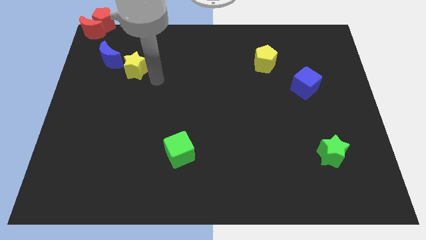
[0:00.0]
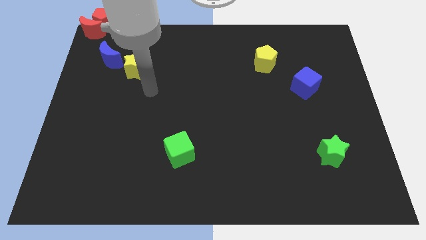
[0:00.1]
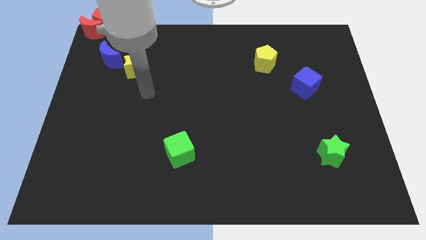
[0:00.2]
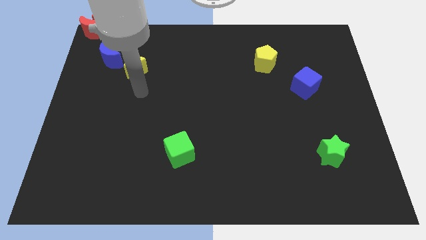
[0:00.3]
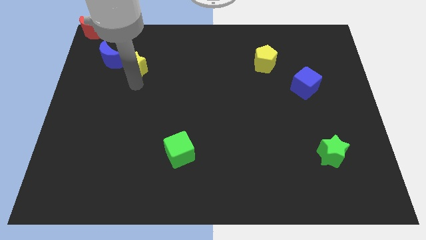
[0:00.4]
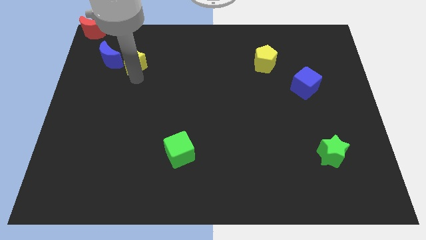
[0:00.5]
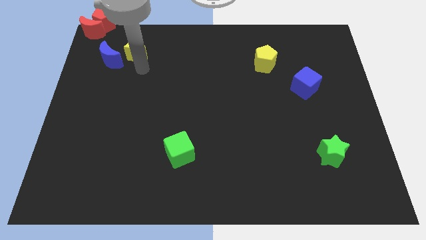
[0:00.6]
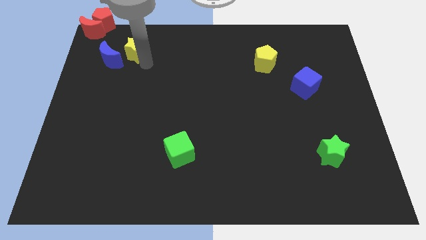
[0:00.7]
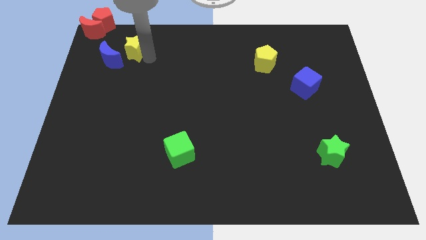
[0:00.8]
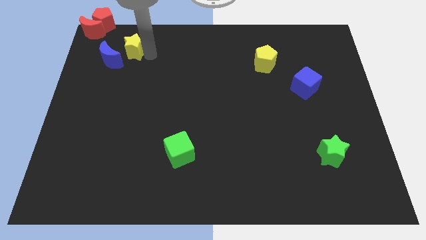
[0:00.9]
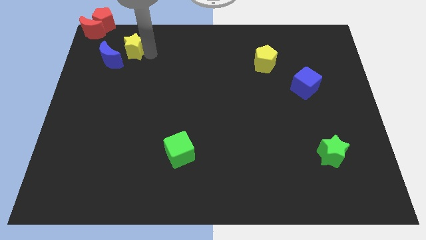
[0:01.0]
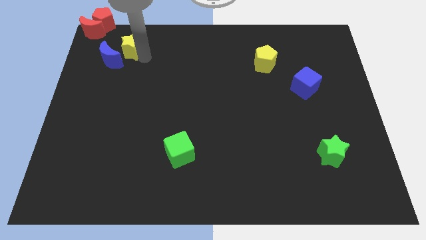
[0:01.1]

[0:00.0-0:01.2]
put the yellow star right to the blue moon

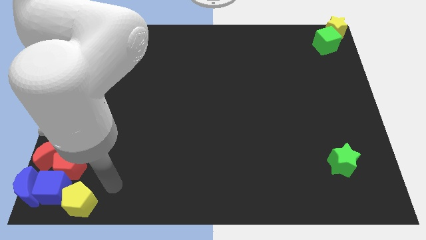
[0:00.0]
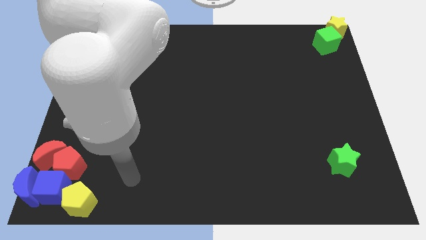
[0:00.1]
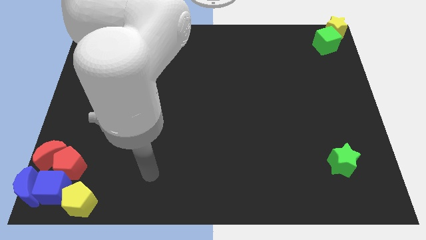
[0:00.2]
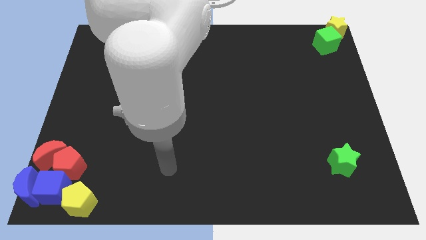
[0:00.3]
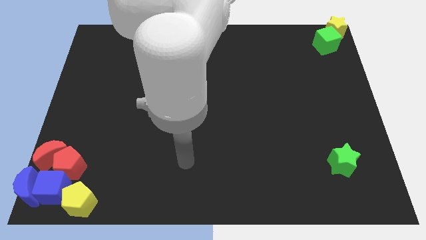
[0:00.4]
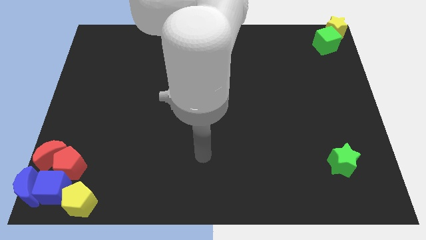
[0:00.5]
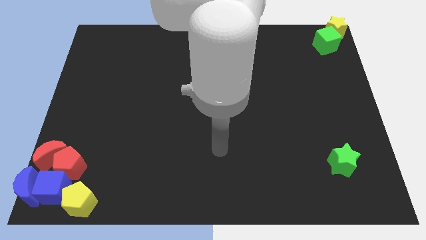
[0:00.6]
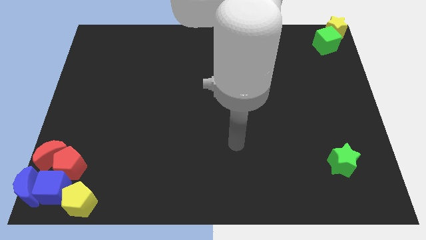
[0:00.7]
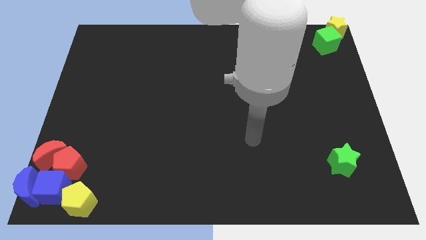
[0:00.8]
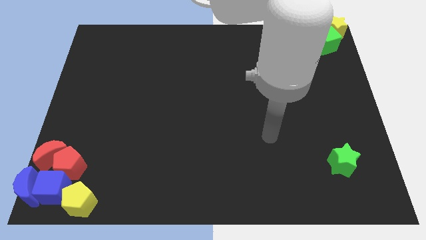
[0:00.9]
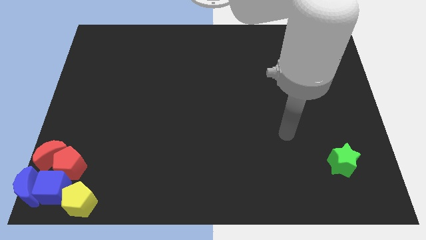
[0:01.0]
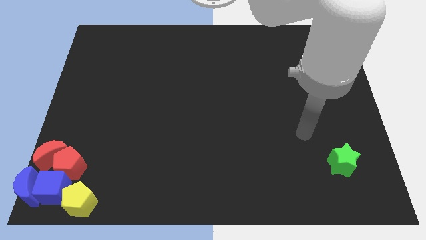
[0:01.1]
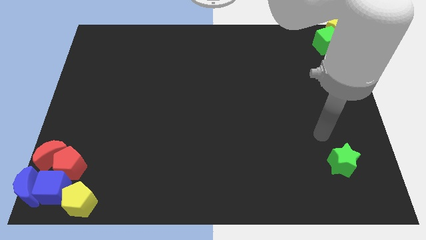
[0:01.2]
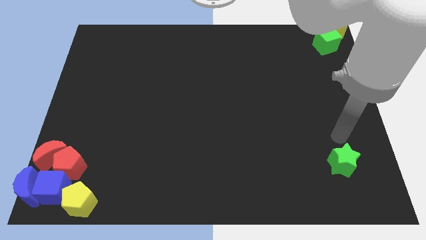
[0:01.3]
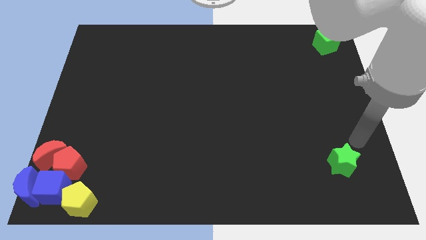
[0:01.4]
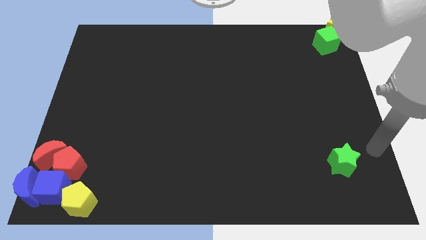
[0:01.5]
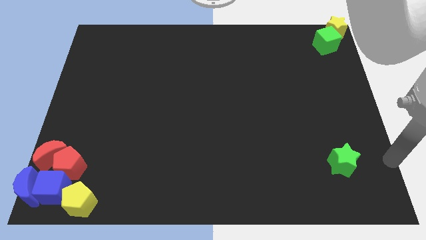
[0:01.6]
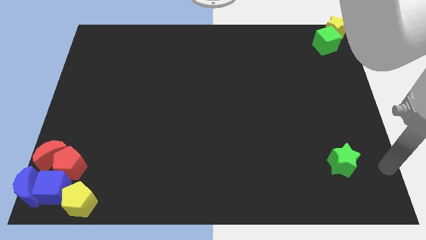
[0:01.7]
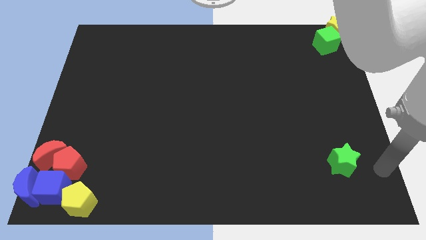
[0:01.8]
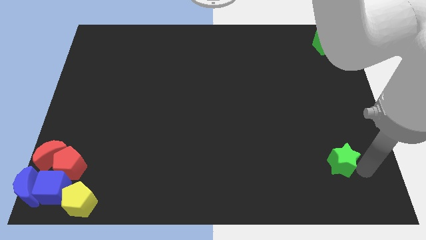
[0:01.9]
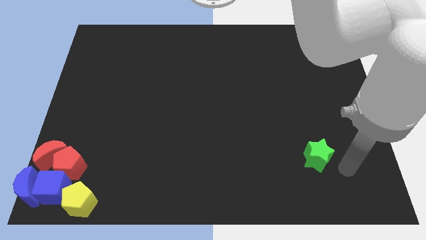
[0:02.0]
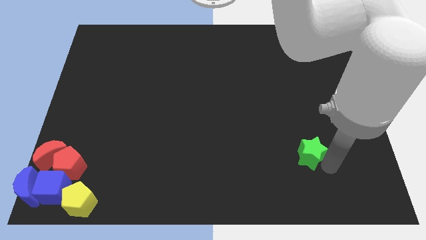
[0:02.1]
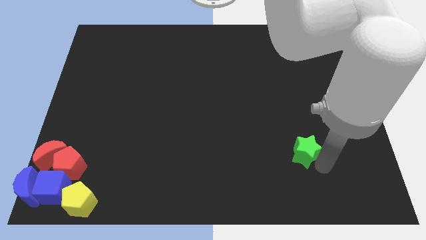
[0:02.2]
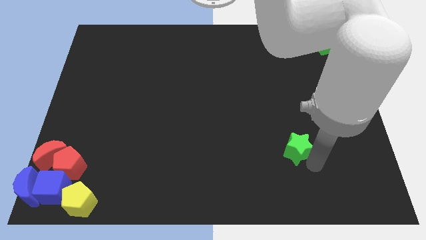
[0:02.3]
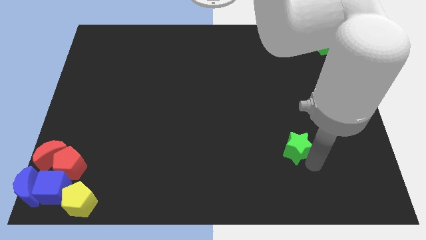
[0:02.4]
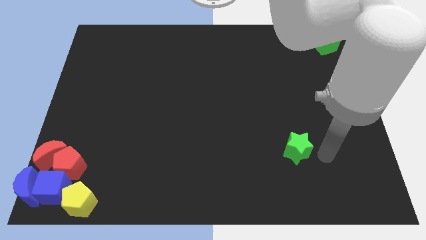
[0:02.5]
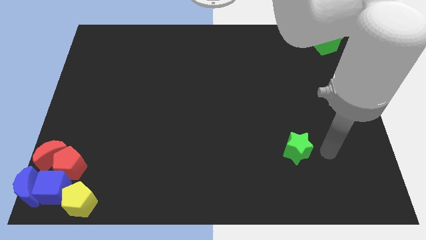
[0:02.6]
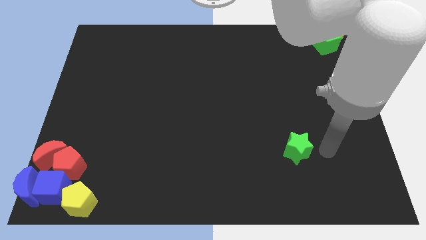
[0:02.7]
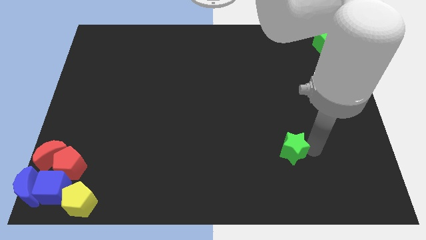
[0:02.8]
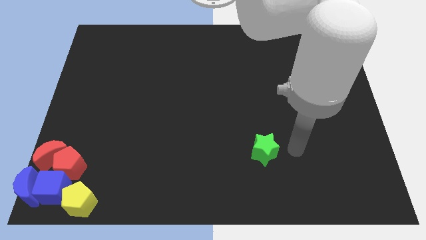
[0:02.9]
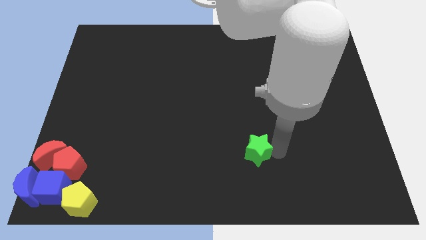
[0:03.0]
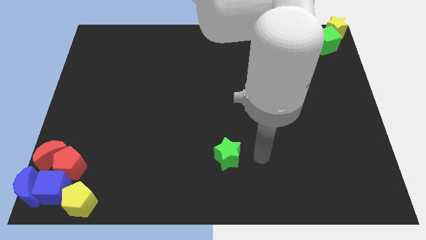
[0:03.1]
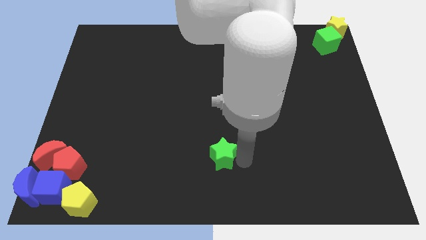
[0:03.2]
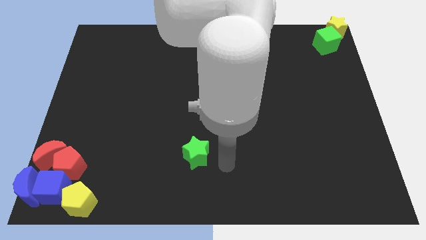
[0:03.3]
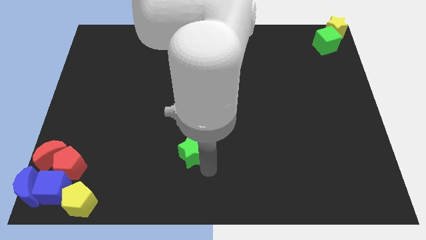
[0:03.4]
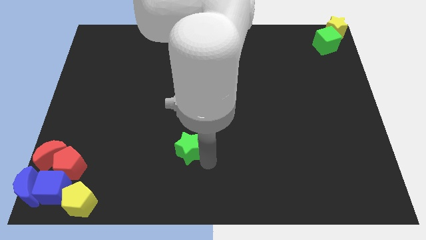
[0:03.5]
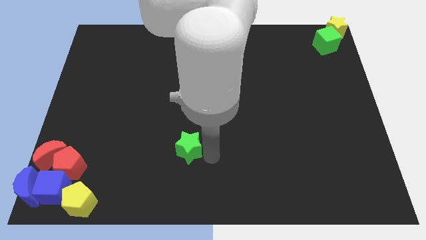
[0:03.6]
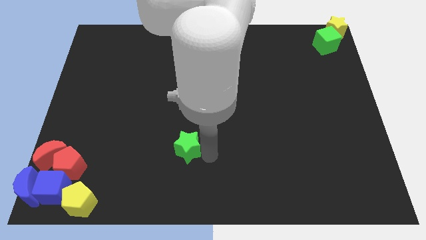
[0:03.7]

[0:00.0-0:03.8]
move the green star to the left side of the board

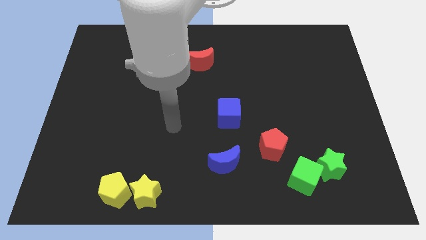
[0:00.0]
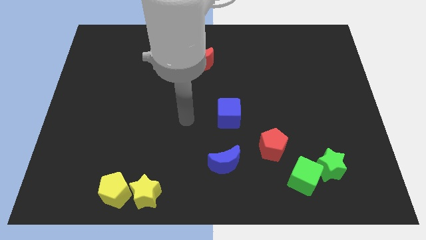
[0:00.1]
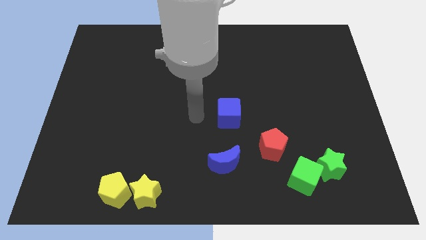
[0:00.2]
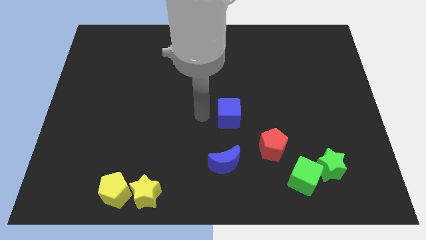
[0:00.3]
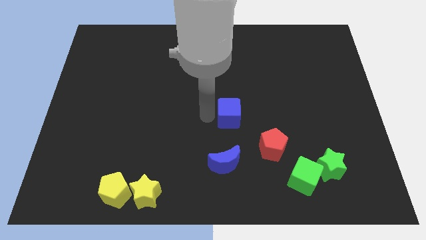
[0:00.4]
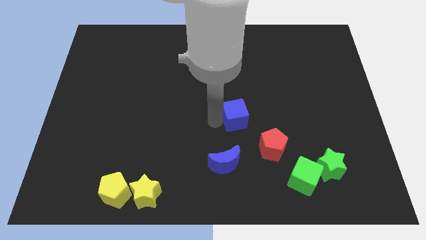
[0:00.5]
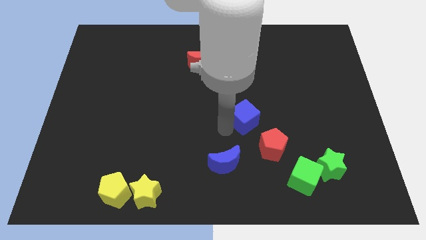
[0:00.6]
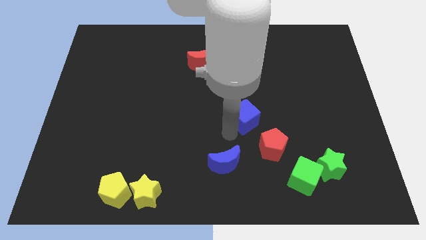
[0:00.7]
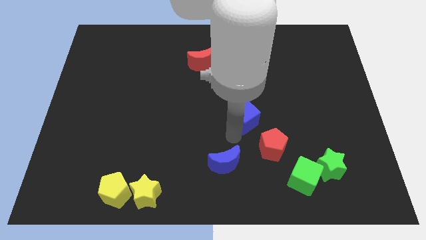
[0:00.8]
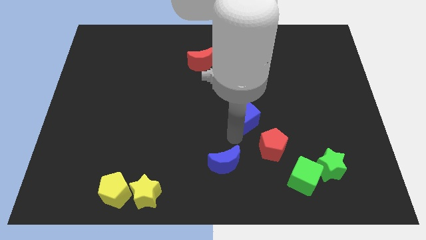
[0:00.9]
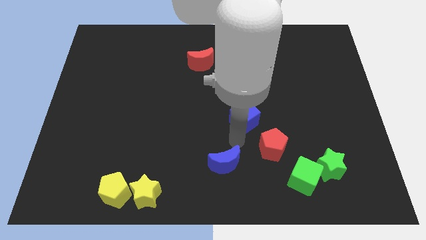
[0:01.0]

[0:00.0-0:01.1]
touch the blue cube

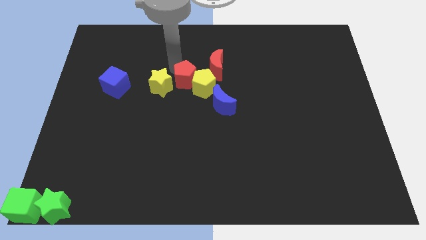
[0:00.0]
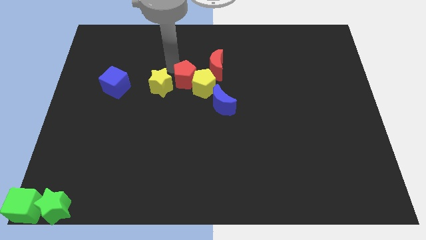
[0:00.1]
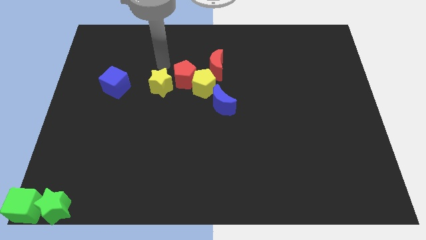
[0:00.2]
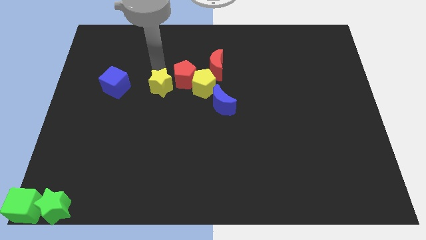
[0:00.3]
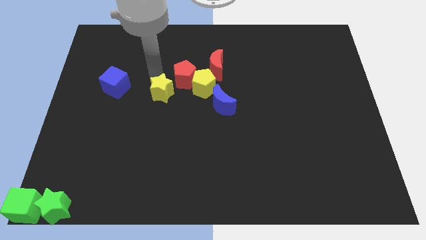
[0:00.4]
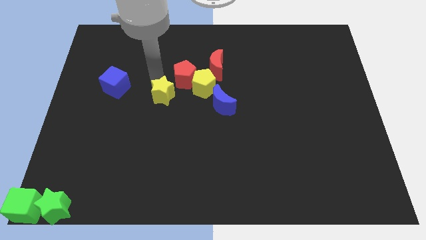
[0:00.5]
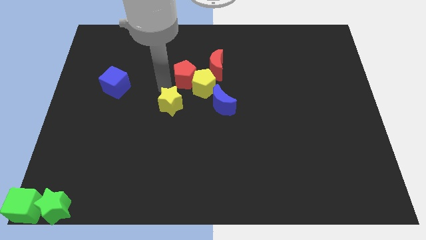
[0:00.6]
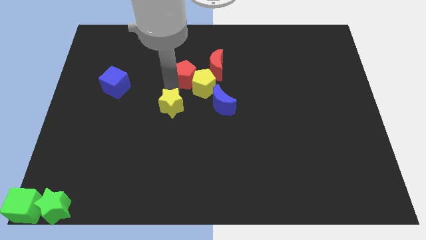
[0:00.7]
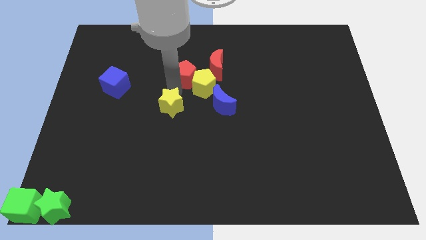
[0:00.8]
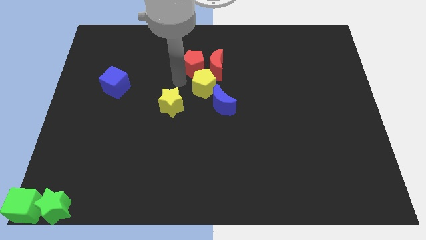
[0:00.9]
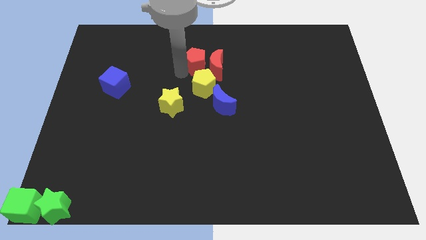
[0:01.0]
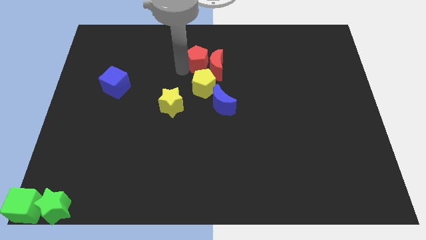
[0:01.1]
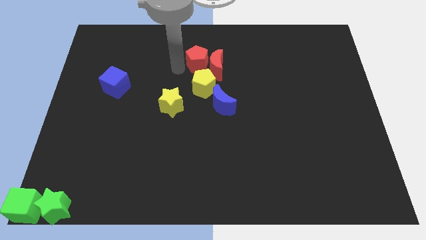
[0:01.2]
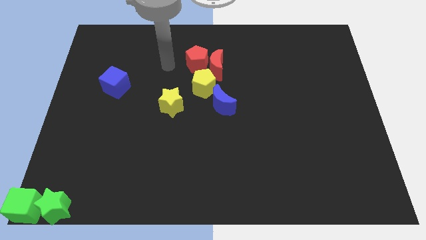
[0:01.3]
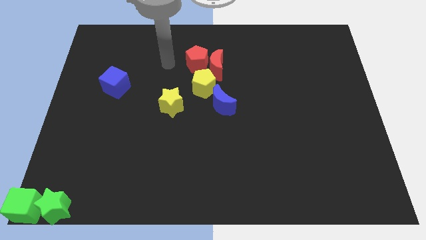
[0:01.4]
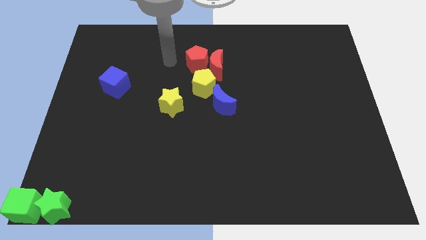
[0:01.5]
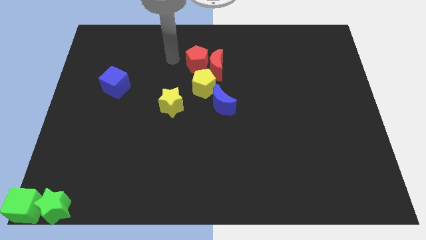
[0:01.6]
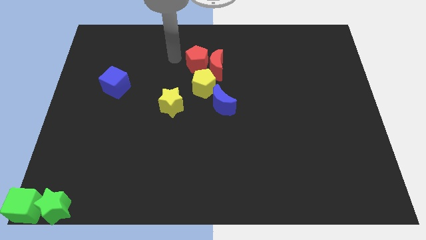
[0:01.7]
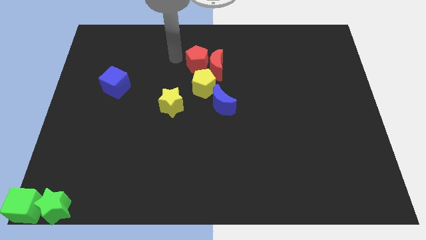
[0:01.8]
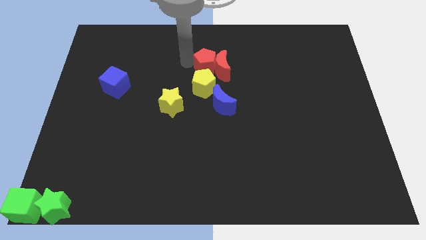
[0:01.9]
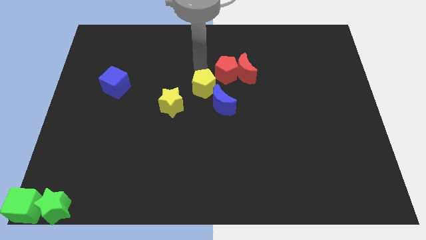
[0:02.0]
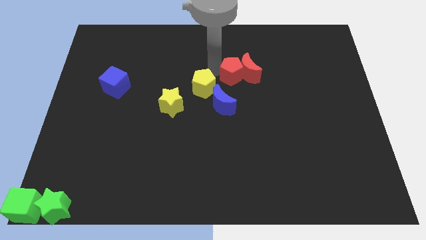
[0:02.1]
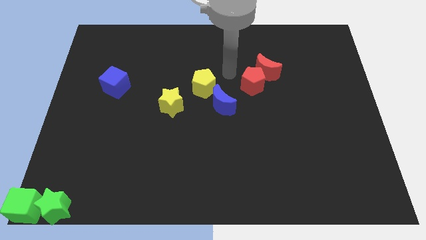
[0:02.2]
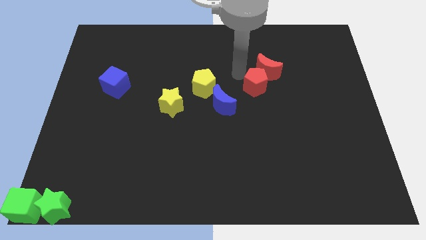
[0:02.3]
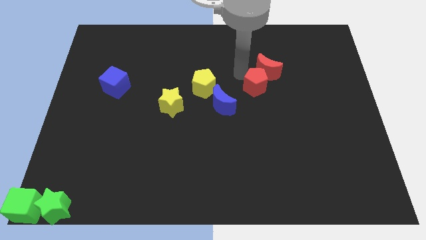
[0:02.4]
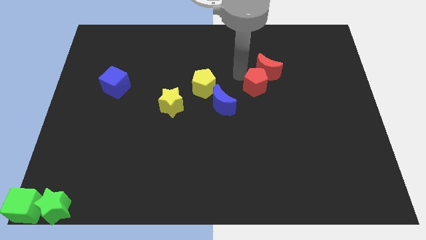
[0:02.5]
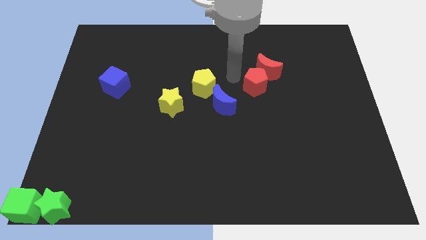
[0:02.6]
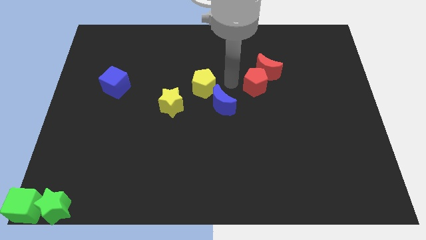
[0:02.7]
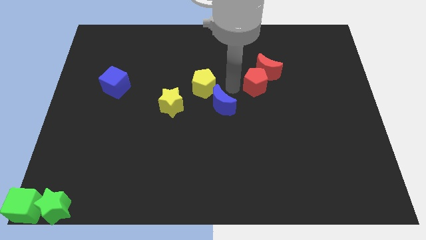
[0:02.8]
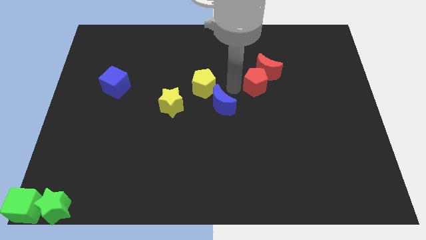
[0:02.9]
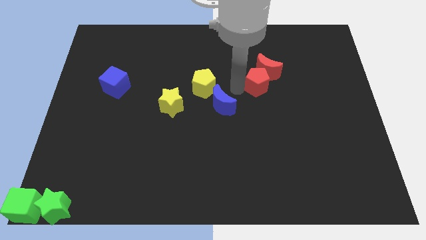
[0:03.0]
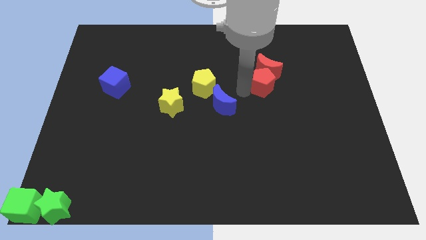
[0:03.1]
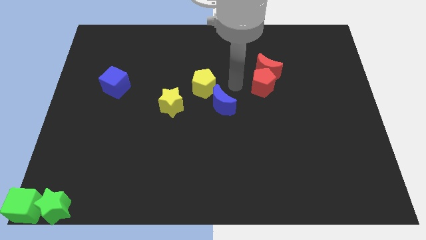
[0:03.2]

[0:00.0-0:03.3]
push the red crescent to the right side of the board along with the red pentagon
